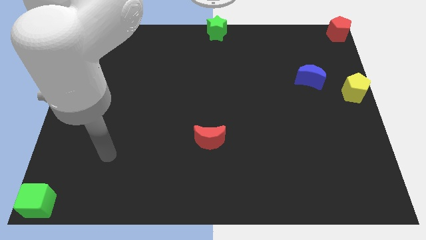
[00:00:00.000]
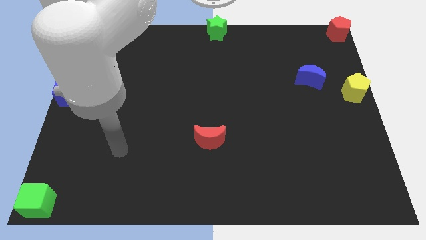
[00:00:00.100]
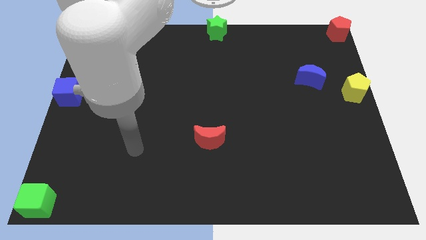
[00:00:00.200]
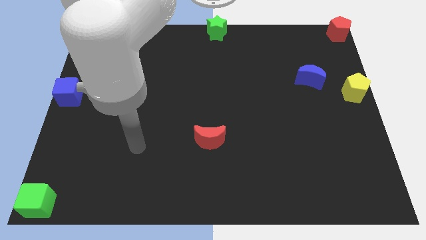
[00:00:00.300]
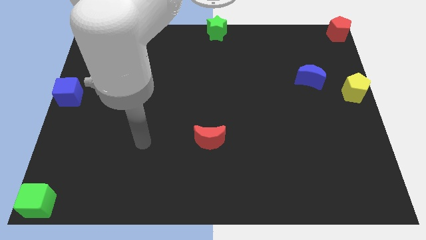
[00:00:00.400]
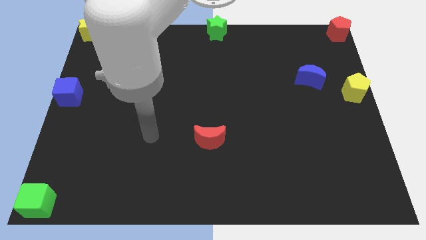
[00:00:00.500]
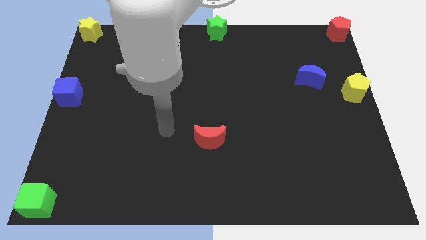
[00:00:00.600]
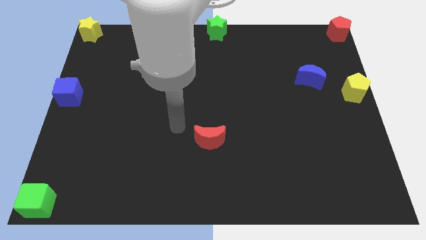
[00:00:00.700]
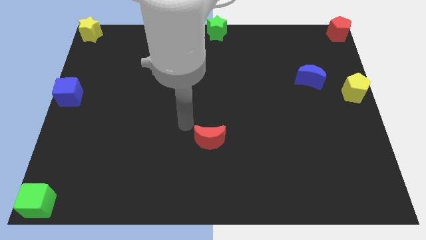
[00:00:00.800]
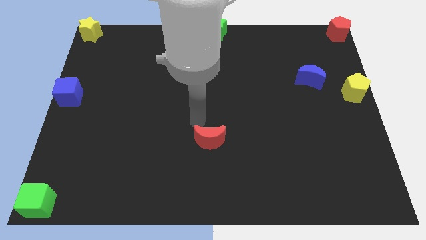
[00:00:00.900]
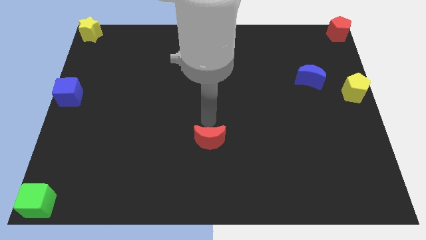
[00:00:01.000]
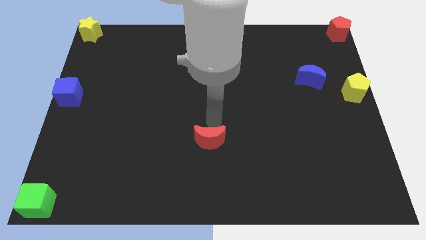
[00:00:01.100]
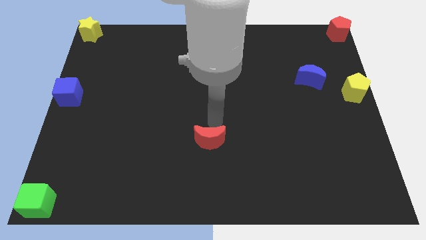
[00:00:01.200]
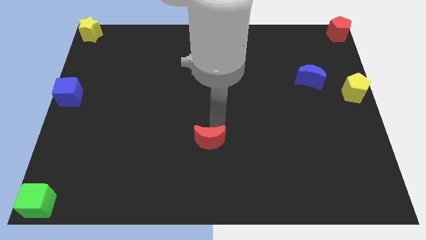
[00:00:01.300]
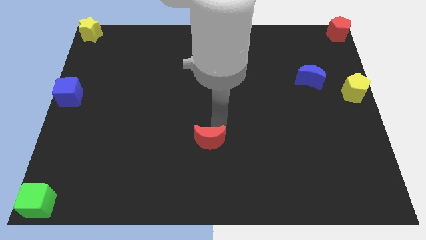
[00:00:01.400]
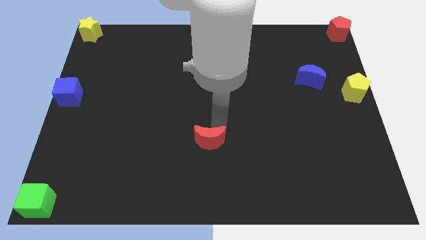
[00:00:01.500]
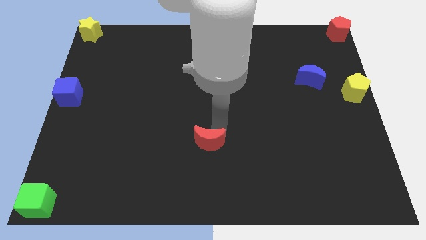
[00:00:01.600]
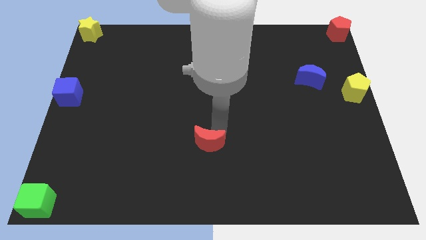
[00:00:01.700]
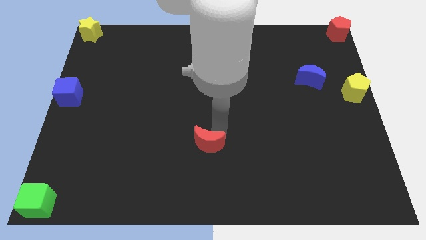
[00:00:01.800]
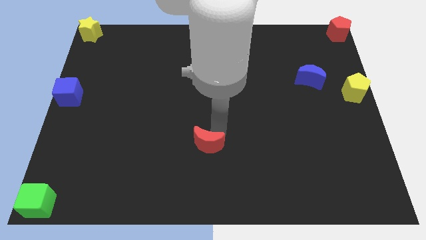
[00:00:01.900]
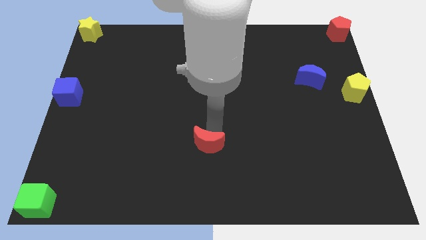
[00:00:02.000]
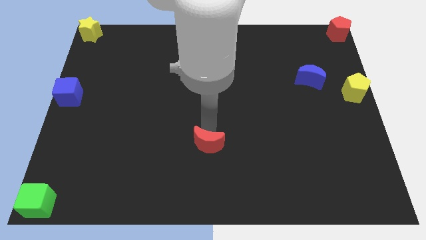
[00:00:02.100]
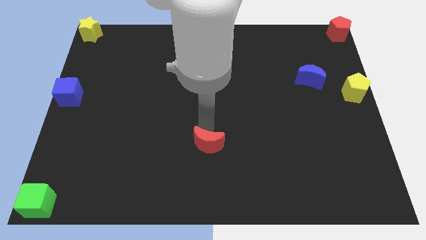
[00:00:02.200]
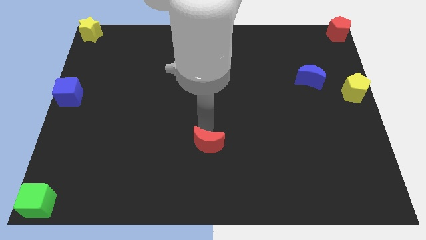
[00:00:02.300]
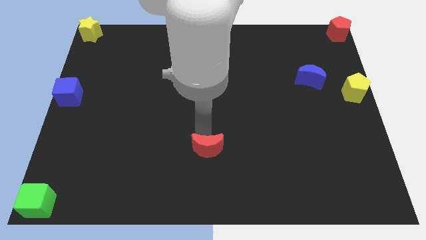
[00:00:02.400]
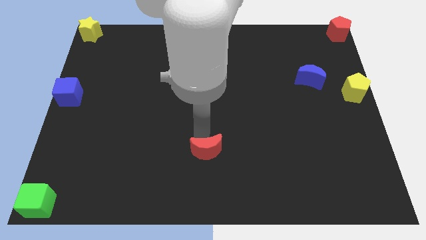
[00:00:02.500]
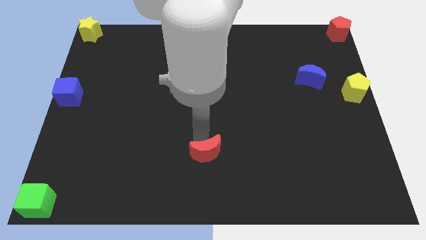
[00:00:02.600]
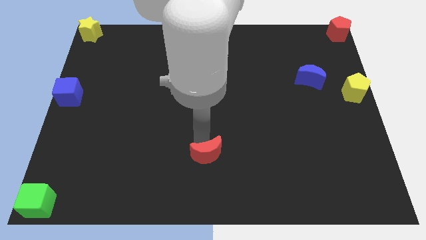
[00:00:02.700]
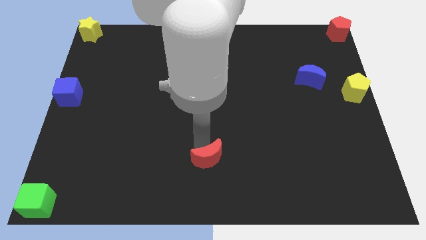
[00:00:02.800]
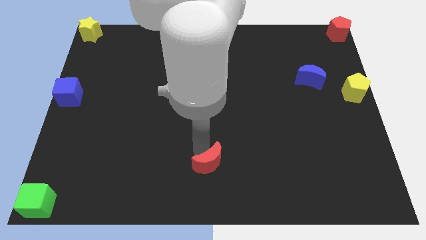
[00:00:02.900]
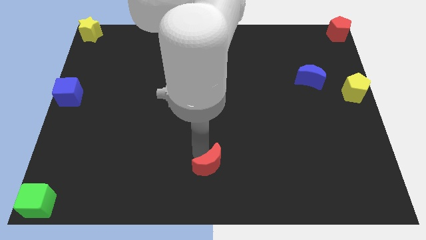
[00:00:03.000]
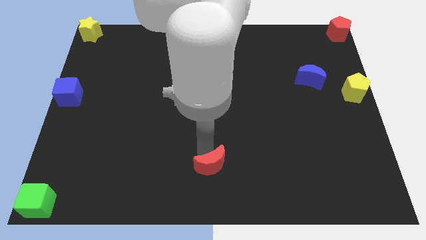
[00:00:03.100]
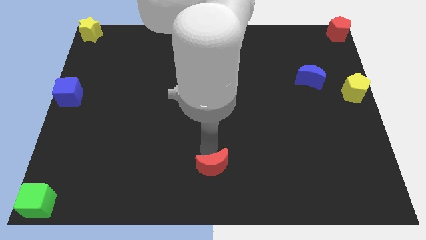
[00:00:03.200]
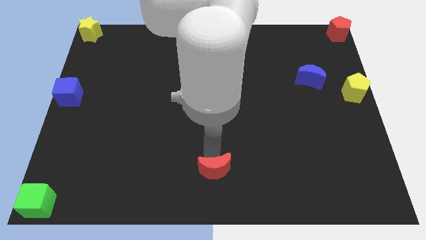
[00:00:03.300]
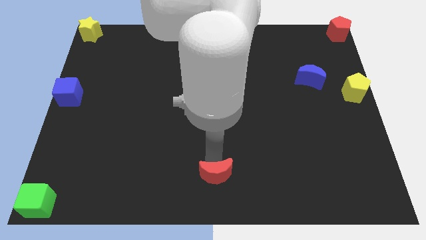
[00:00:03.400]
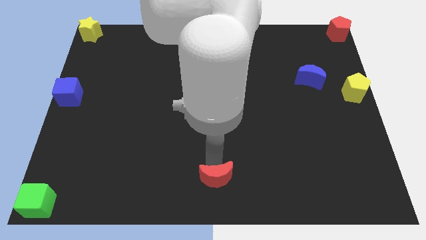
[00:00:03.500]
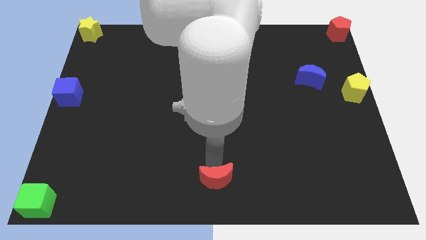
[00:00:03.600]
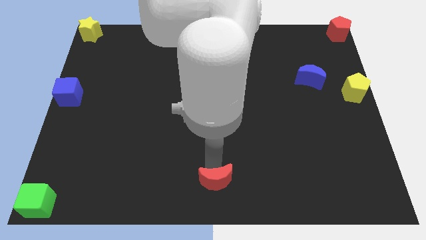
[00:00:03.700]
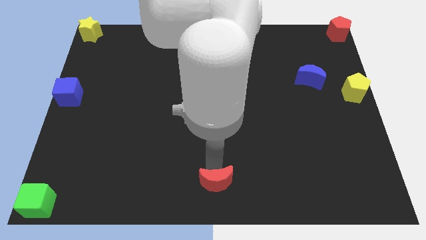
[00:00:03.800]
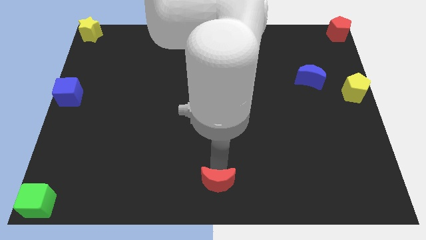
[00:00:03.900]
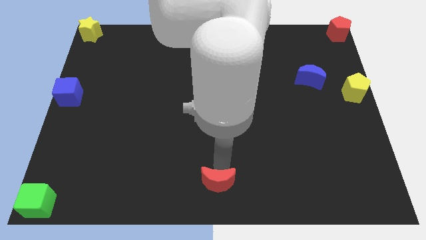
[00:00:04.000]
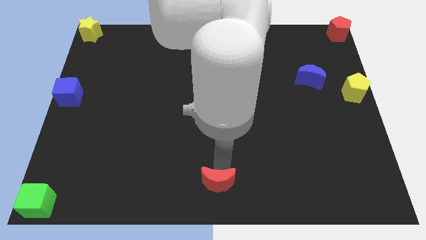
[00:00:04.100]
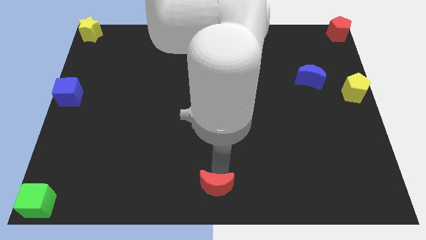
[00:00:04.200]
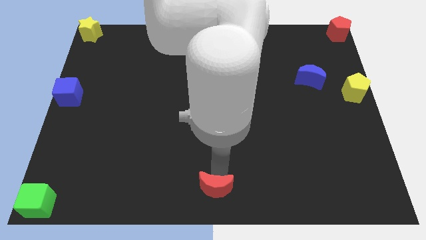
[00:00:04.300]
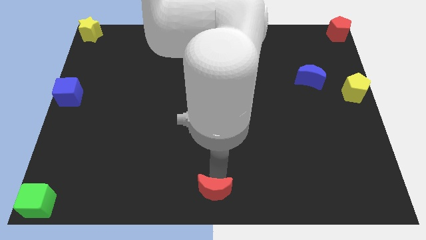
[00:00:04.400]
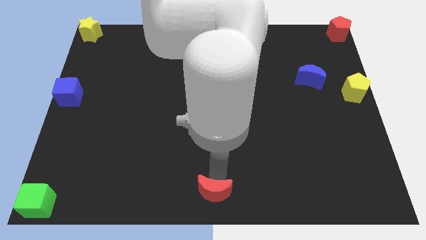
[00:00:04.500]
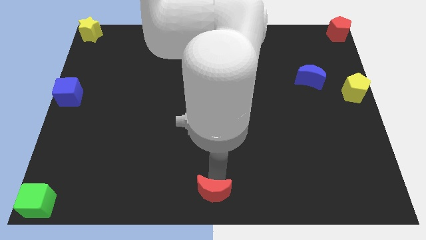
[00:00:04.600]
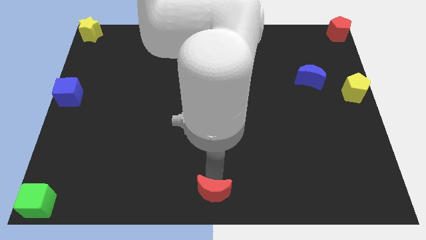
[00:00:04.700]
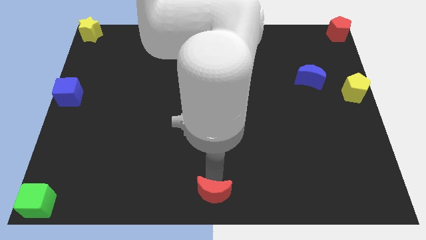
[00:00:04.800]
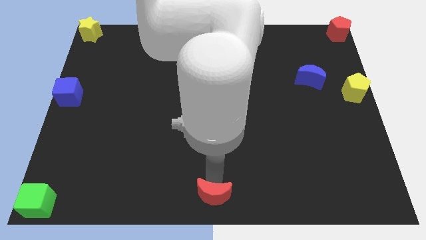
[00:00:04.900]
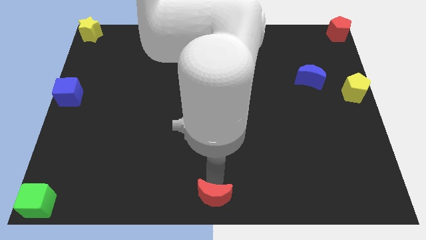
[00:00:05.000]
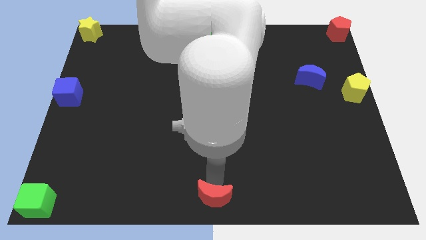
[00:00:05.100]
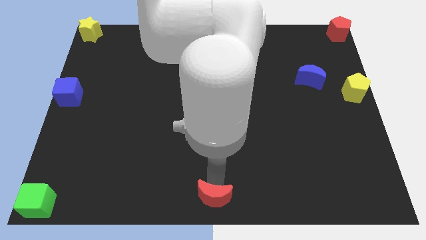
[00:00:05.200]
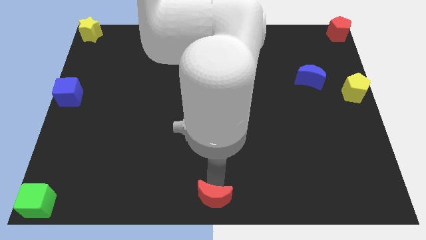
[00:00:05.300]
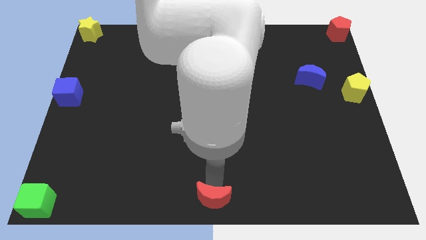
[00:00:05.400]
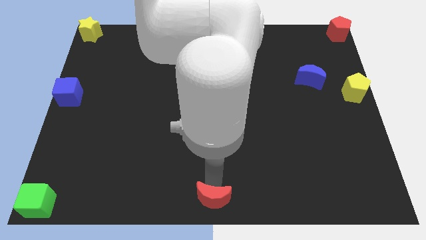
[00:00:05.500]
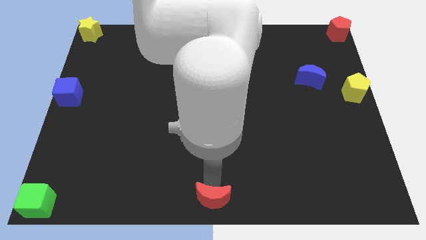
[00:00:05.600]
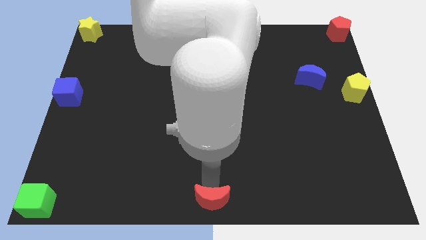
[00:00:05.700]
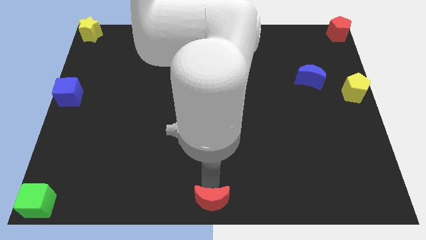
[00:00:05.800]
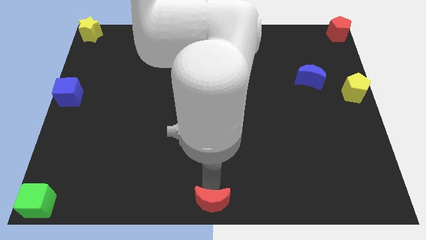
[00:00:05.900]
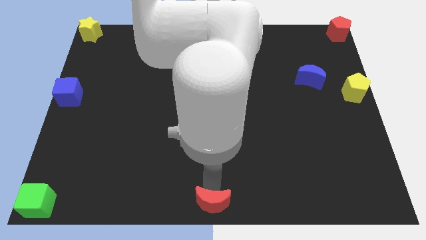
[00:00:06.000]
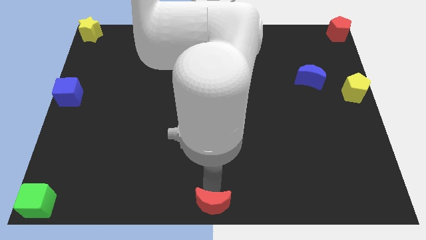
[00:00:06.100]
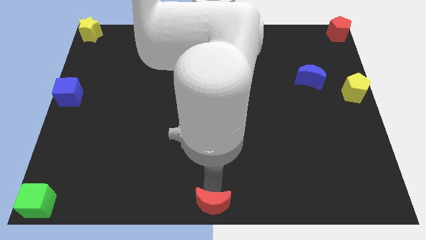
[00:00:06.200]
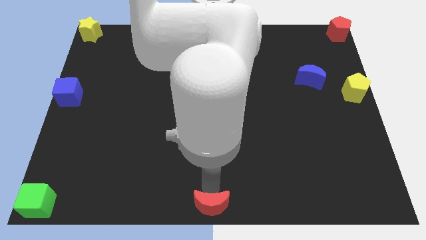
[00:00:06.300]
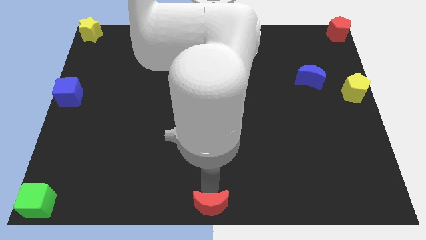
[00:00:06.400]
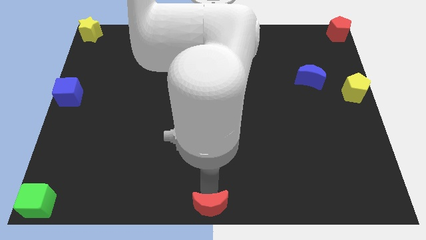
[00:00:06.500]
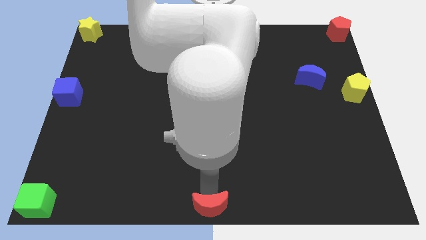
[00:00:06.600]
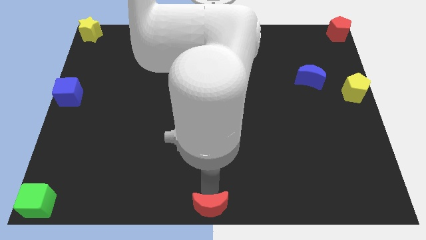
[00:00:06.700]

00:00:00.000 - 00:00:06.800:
move red moon to the middle of the board at the bottom side

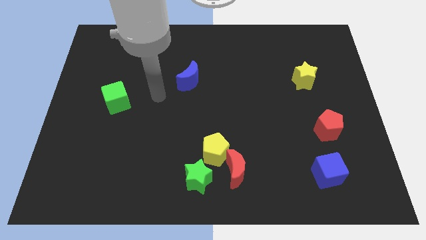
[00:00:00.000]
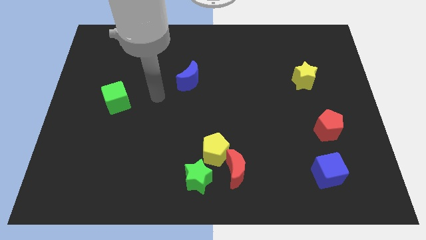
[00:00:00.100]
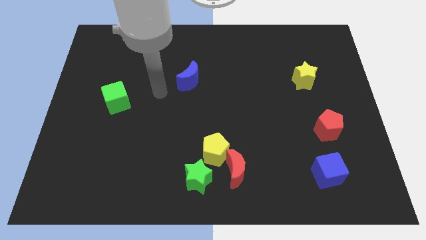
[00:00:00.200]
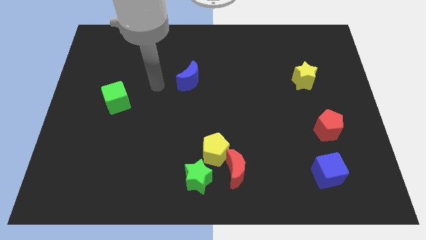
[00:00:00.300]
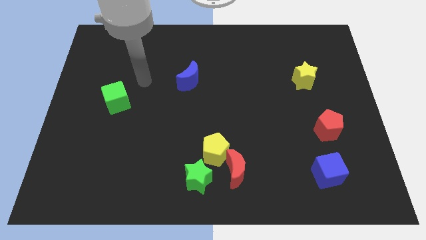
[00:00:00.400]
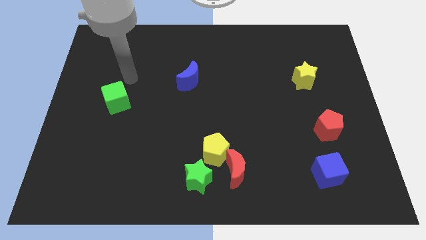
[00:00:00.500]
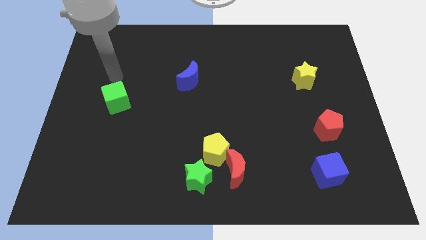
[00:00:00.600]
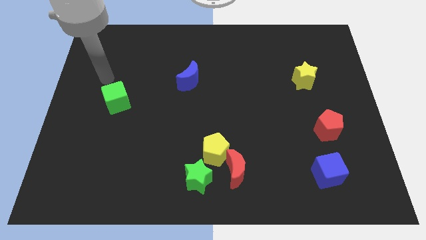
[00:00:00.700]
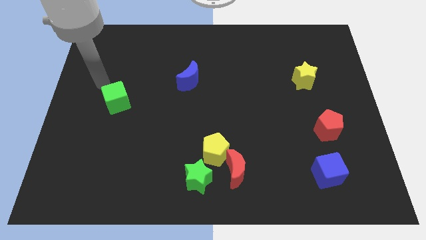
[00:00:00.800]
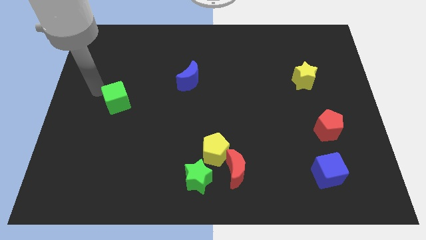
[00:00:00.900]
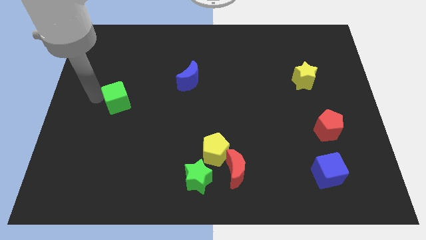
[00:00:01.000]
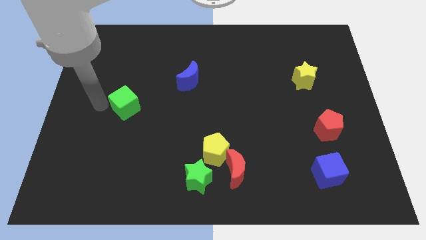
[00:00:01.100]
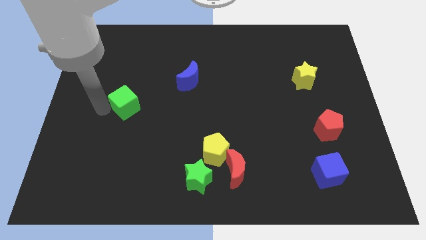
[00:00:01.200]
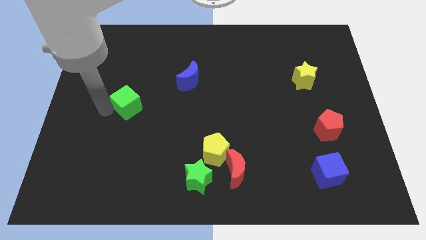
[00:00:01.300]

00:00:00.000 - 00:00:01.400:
move your arm close to the green cube

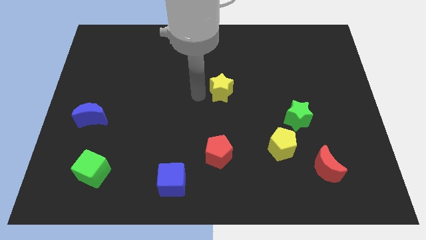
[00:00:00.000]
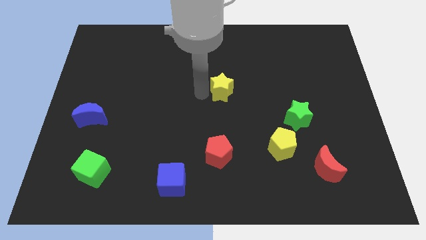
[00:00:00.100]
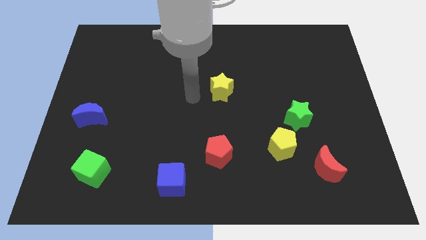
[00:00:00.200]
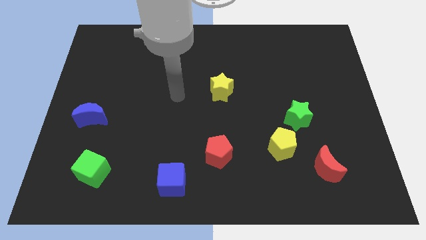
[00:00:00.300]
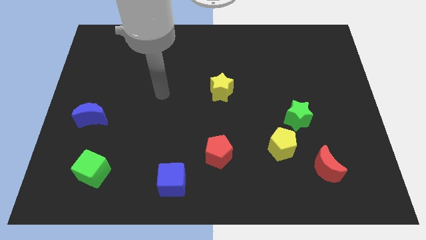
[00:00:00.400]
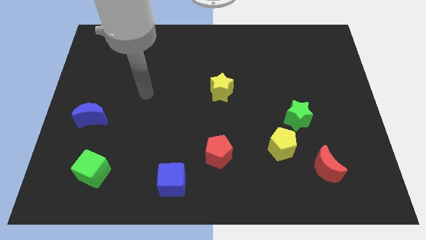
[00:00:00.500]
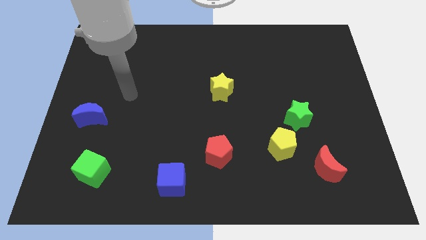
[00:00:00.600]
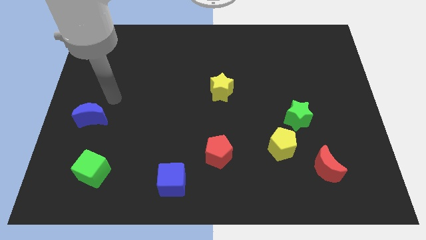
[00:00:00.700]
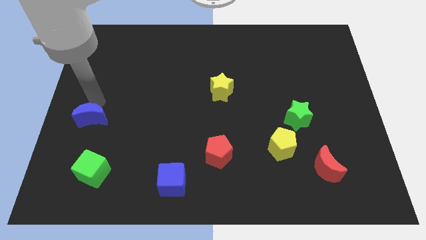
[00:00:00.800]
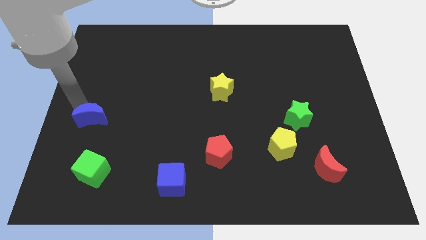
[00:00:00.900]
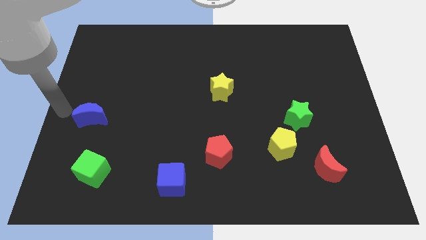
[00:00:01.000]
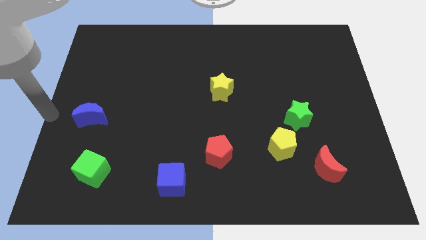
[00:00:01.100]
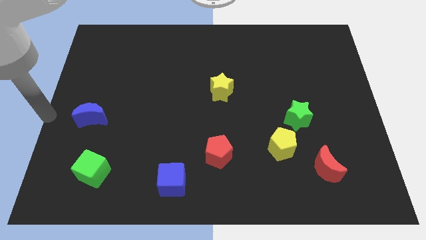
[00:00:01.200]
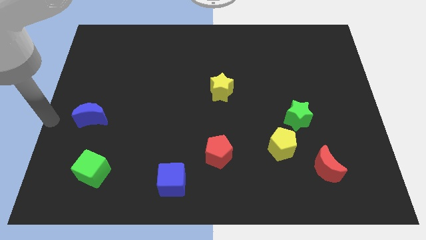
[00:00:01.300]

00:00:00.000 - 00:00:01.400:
point your arm at the center left side of the board
